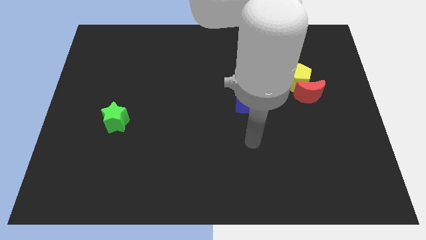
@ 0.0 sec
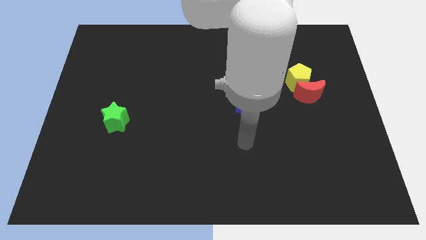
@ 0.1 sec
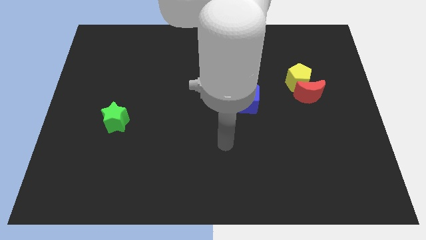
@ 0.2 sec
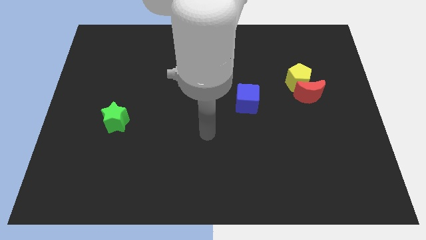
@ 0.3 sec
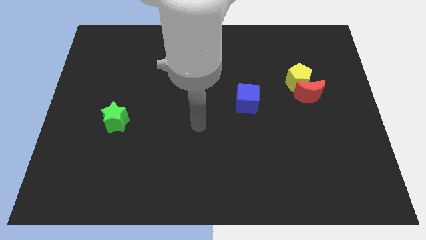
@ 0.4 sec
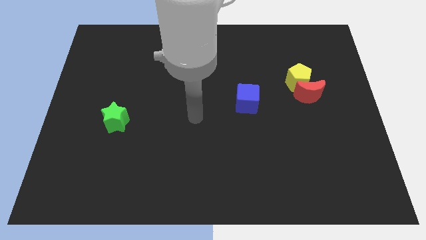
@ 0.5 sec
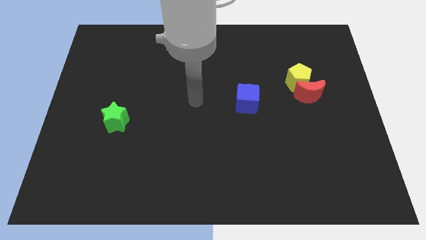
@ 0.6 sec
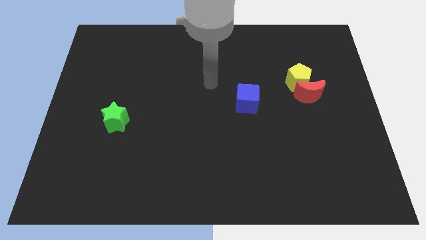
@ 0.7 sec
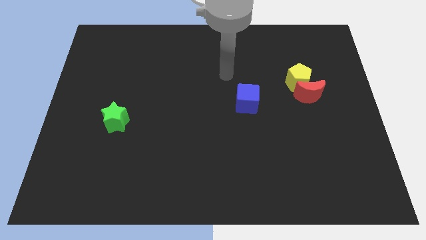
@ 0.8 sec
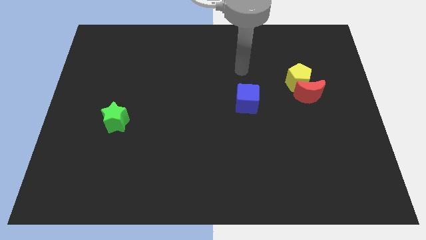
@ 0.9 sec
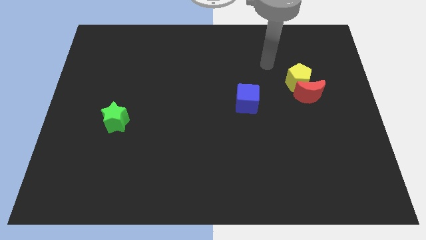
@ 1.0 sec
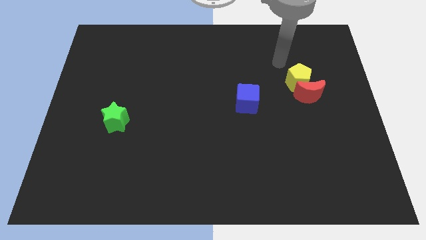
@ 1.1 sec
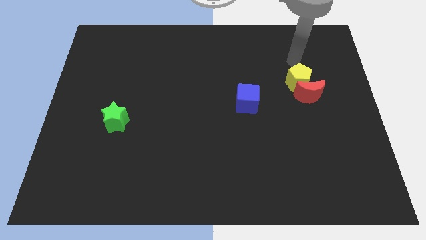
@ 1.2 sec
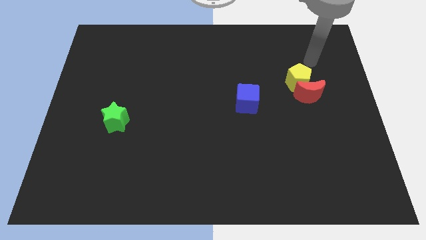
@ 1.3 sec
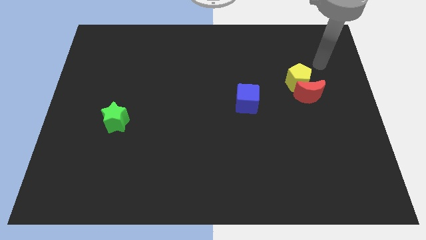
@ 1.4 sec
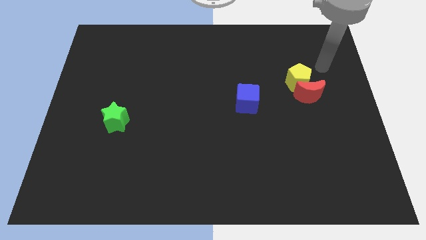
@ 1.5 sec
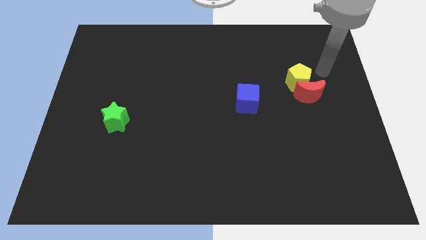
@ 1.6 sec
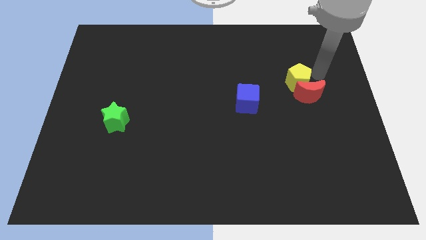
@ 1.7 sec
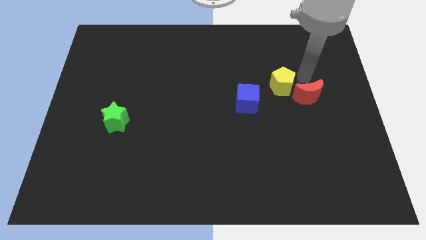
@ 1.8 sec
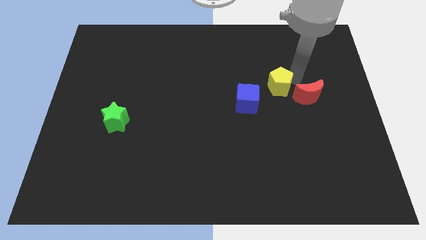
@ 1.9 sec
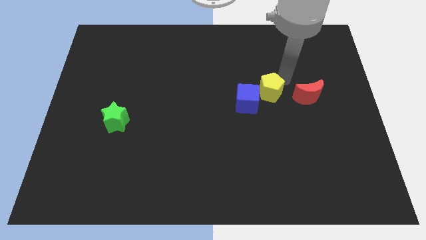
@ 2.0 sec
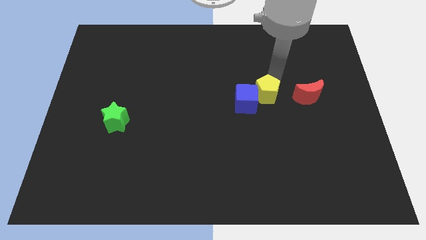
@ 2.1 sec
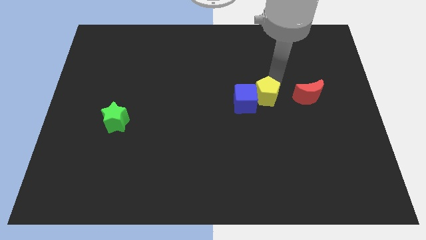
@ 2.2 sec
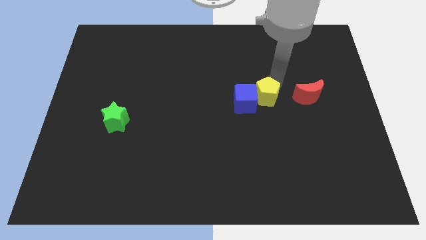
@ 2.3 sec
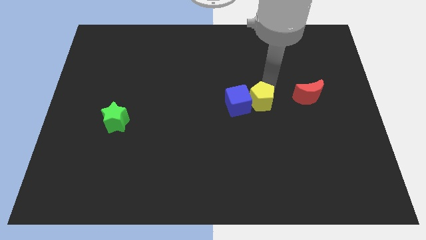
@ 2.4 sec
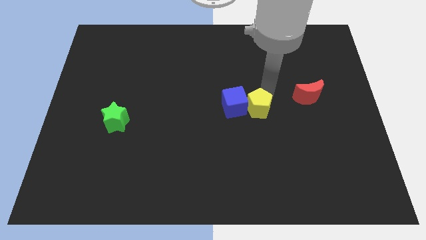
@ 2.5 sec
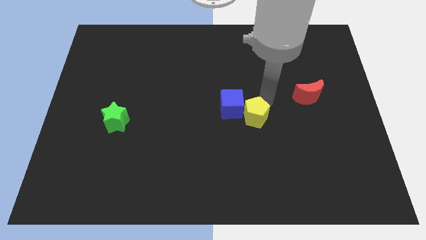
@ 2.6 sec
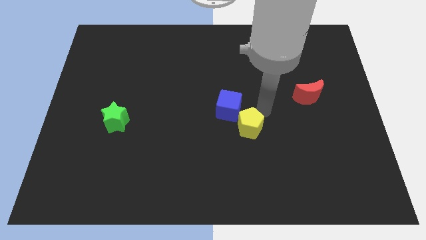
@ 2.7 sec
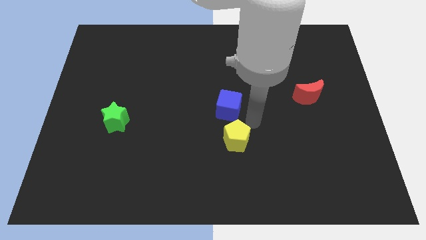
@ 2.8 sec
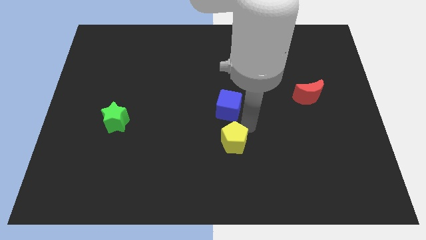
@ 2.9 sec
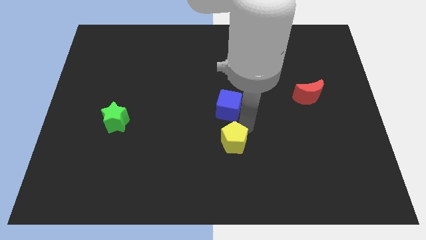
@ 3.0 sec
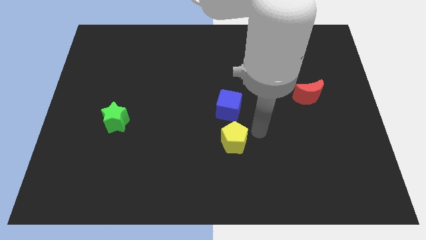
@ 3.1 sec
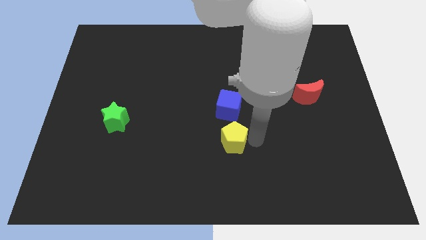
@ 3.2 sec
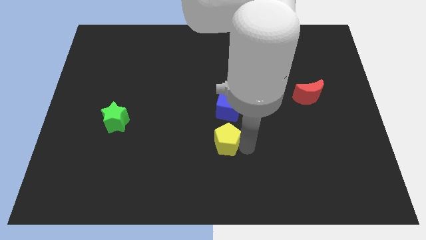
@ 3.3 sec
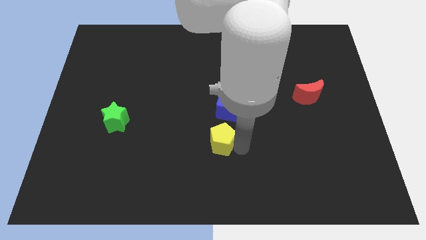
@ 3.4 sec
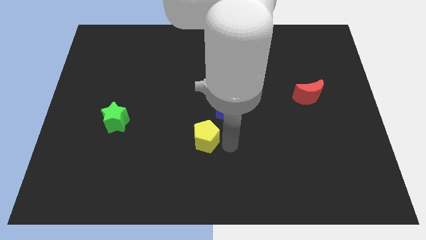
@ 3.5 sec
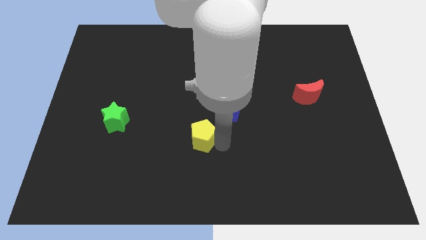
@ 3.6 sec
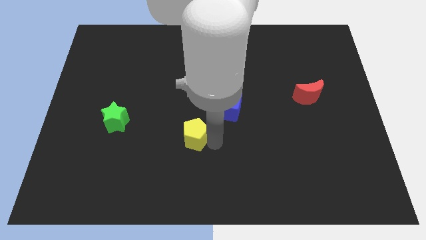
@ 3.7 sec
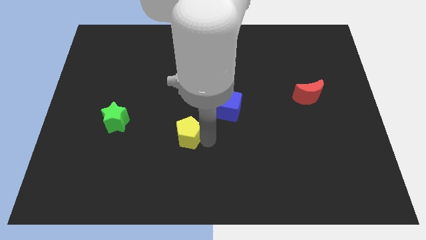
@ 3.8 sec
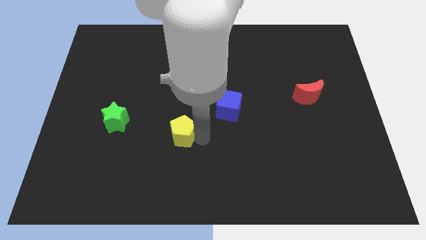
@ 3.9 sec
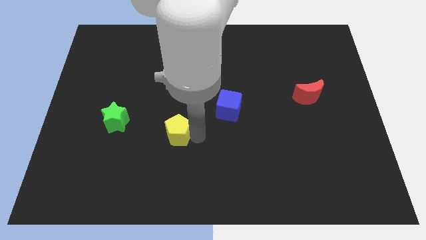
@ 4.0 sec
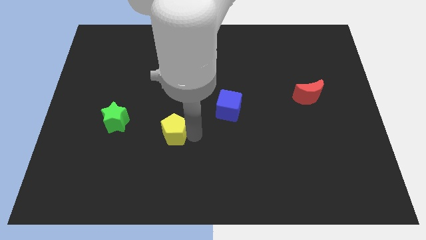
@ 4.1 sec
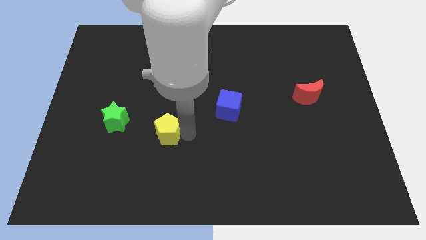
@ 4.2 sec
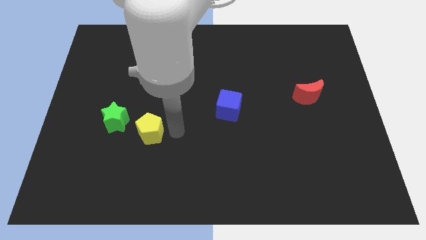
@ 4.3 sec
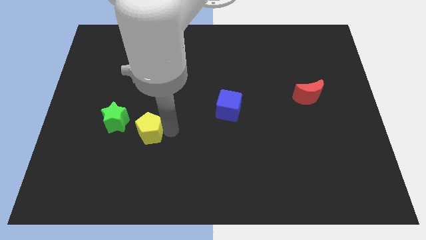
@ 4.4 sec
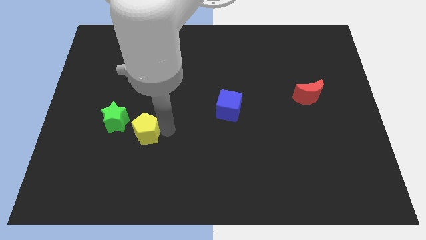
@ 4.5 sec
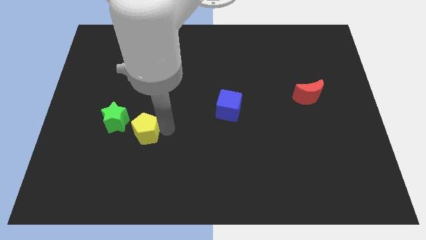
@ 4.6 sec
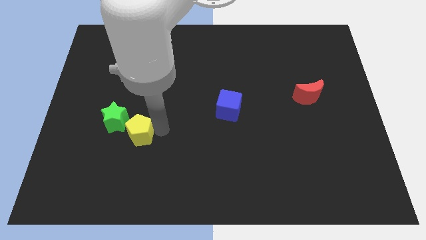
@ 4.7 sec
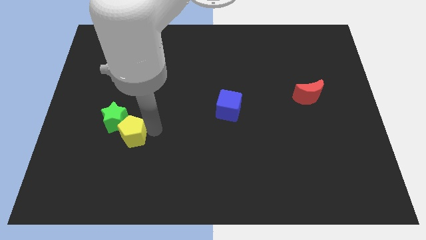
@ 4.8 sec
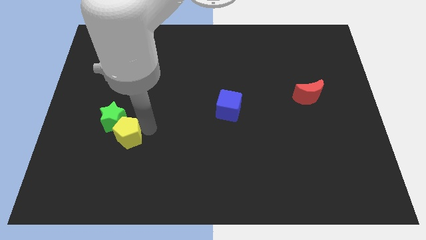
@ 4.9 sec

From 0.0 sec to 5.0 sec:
move the yellow pentagon close to the star

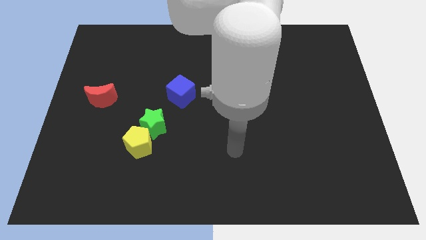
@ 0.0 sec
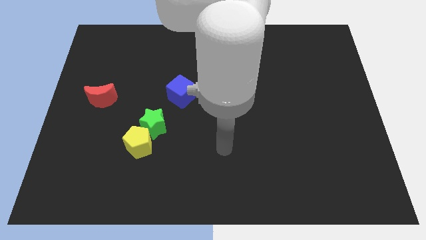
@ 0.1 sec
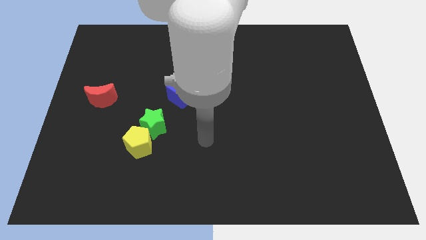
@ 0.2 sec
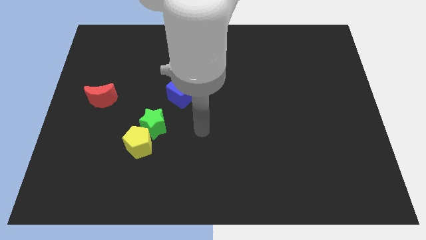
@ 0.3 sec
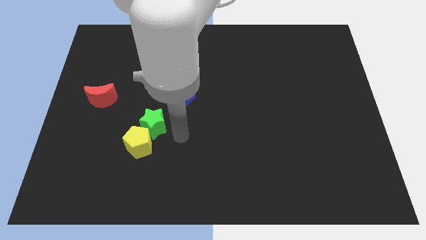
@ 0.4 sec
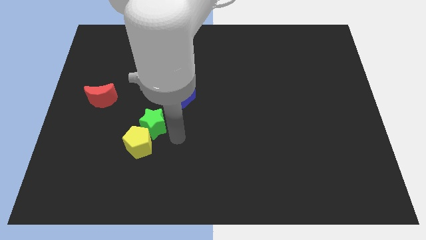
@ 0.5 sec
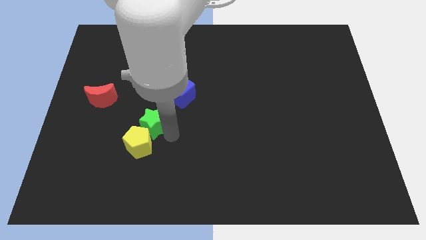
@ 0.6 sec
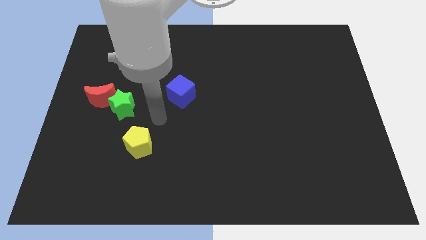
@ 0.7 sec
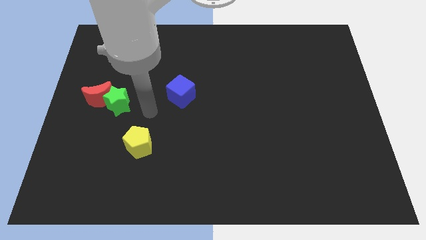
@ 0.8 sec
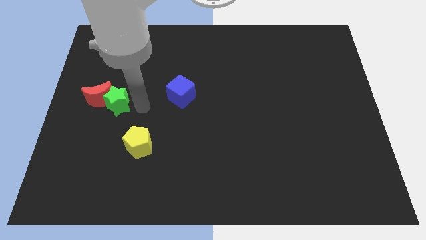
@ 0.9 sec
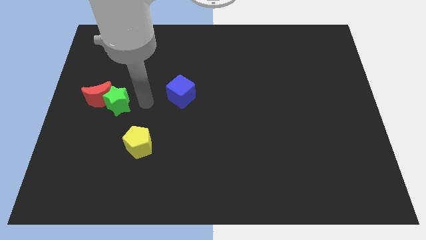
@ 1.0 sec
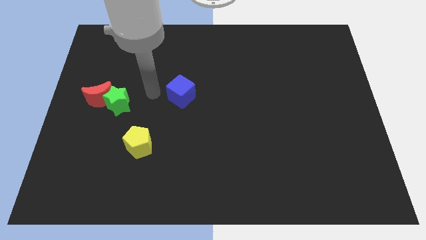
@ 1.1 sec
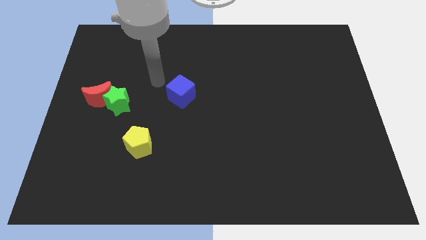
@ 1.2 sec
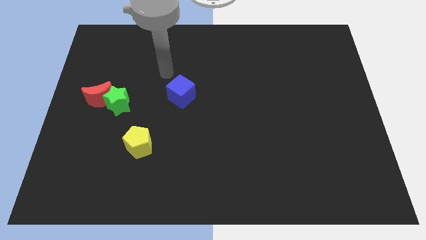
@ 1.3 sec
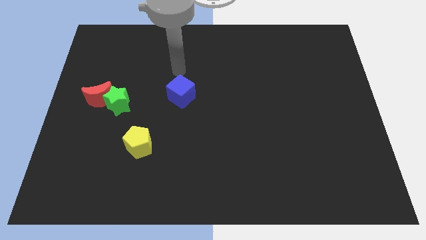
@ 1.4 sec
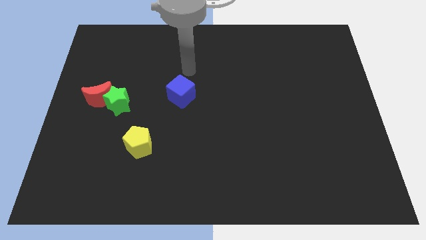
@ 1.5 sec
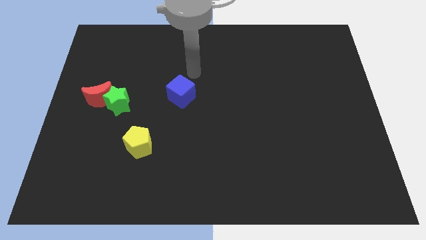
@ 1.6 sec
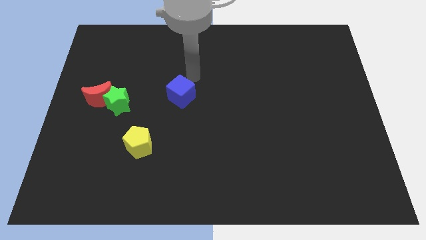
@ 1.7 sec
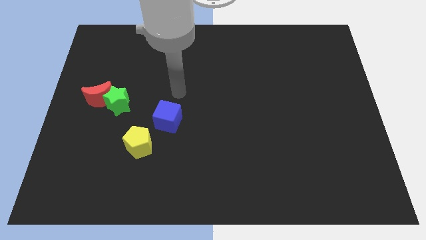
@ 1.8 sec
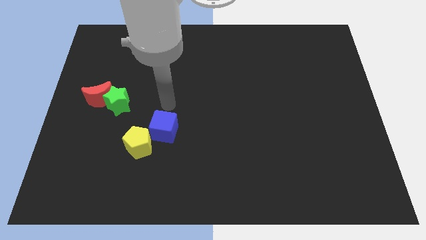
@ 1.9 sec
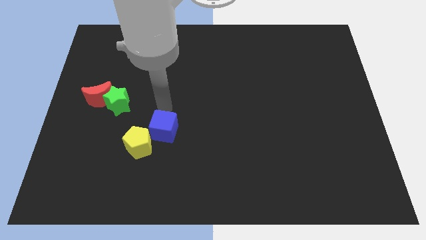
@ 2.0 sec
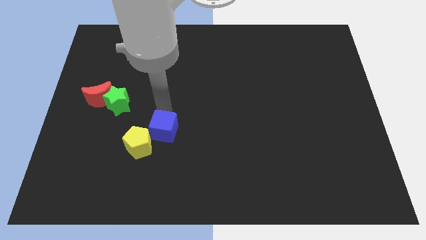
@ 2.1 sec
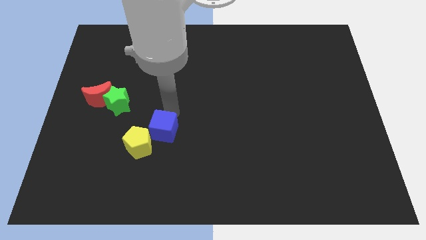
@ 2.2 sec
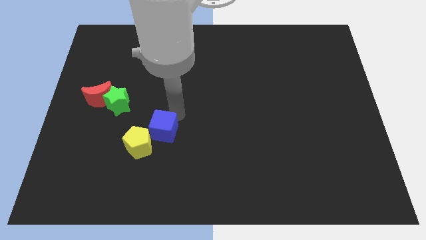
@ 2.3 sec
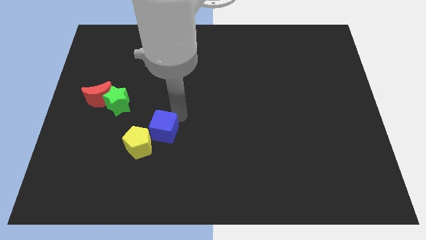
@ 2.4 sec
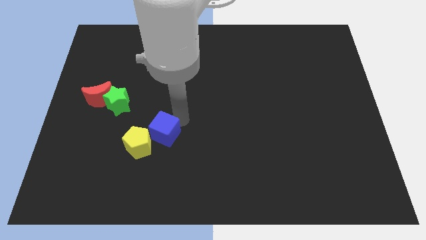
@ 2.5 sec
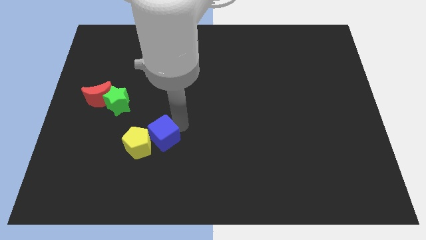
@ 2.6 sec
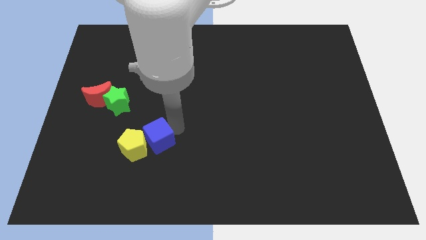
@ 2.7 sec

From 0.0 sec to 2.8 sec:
move the blue cube close to the yellow pentagon

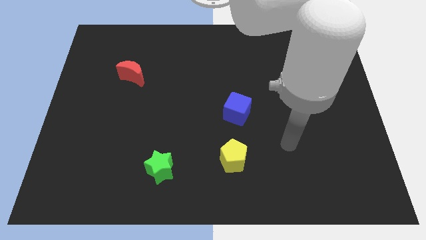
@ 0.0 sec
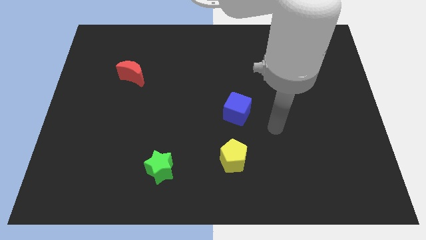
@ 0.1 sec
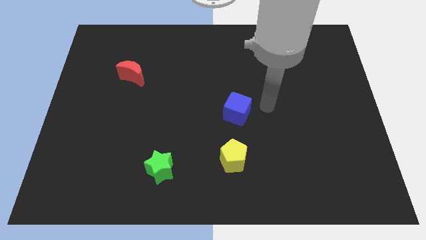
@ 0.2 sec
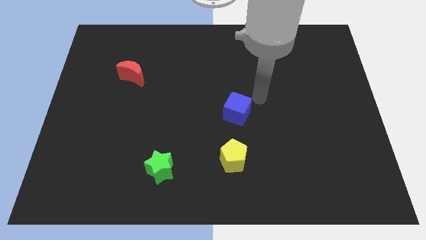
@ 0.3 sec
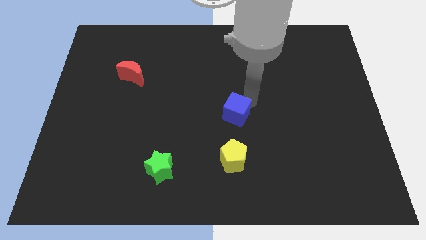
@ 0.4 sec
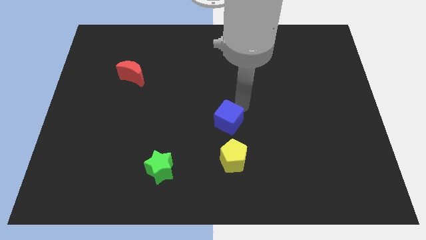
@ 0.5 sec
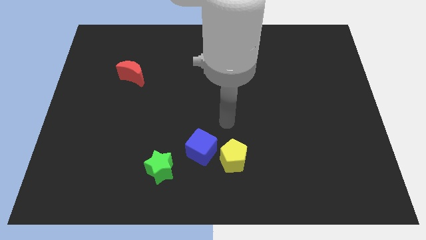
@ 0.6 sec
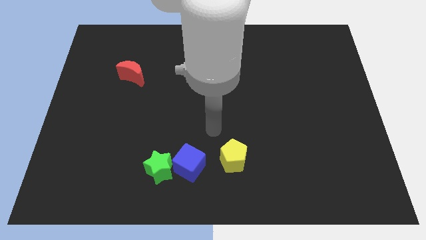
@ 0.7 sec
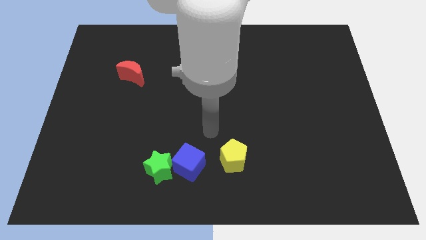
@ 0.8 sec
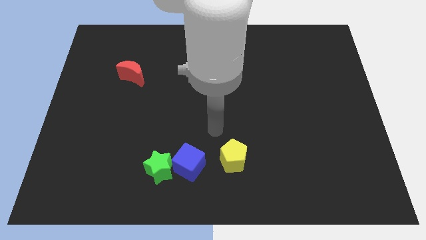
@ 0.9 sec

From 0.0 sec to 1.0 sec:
put the cube next to the green star

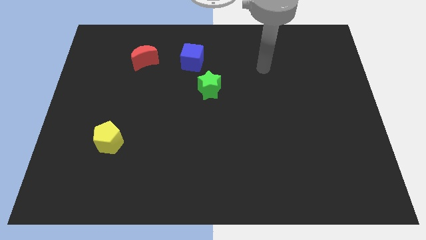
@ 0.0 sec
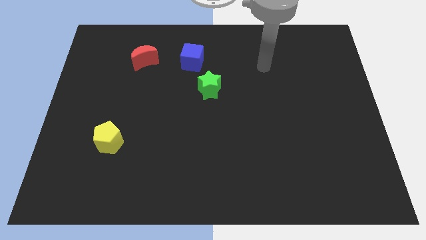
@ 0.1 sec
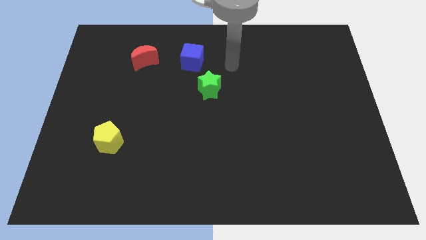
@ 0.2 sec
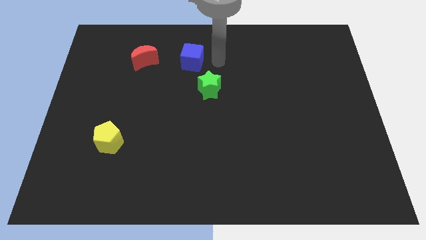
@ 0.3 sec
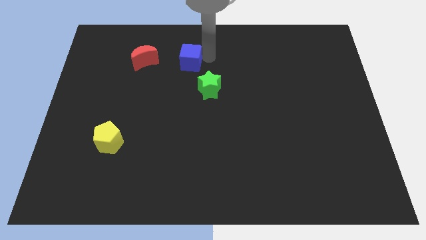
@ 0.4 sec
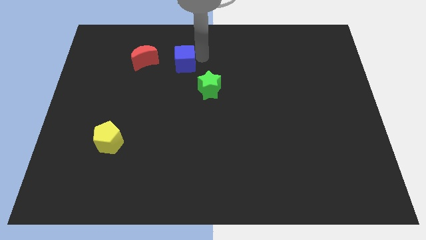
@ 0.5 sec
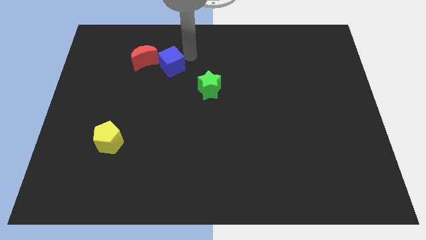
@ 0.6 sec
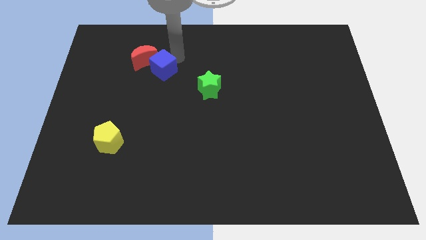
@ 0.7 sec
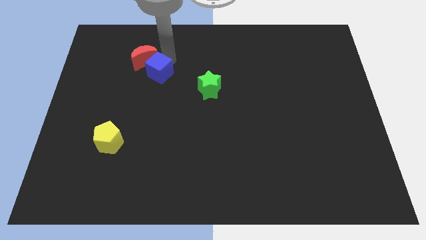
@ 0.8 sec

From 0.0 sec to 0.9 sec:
slide the blue cube close to the red moon
